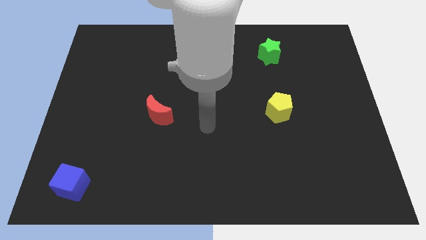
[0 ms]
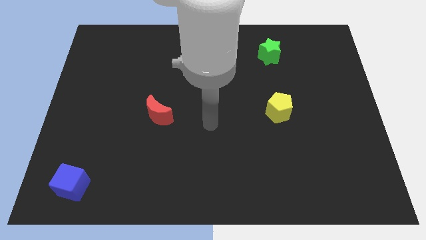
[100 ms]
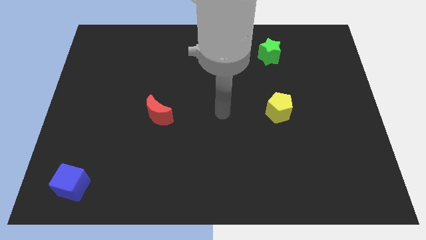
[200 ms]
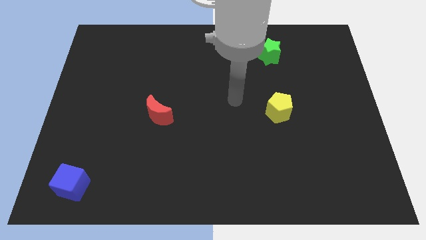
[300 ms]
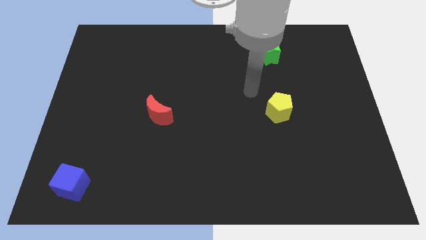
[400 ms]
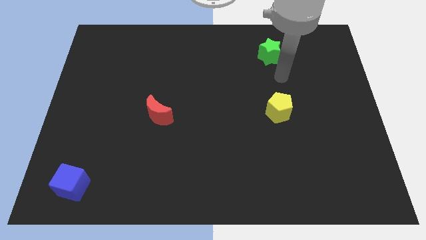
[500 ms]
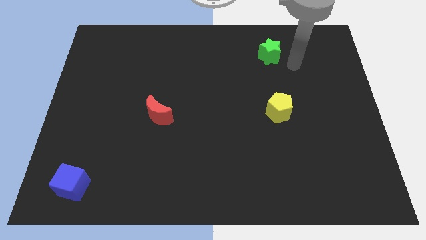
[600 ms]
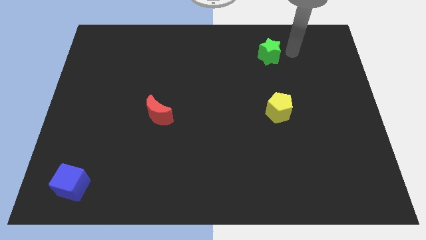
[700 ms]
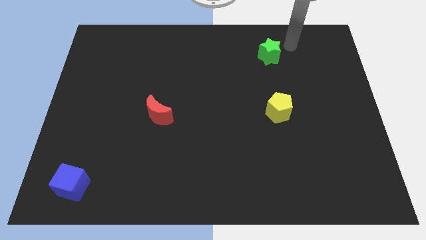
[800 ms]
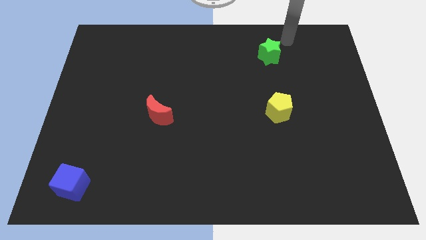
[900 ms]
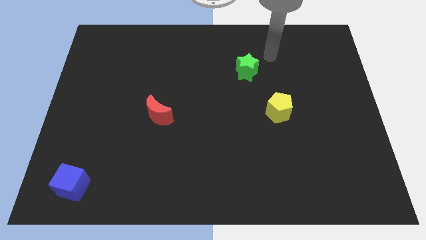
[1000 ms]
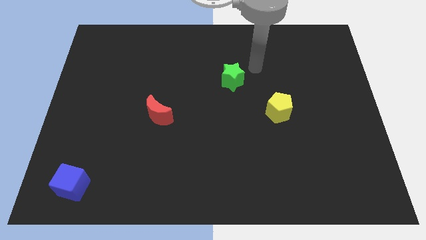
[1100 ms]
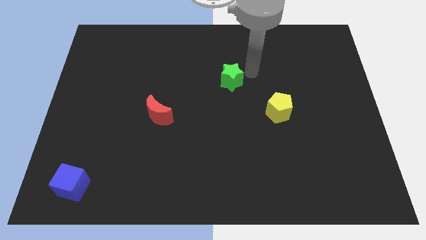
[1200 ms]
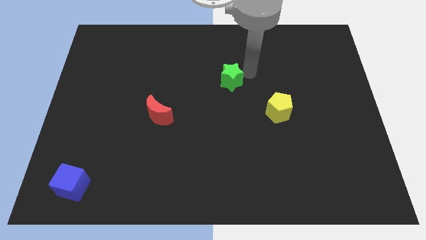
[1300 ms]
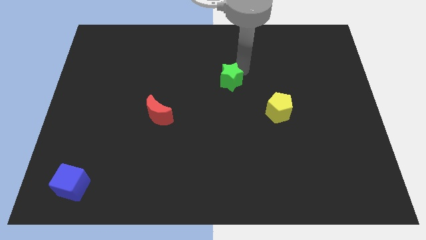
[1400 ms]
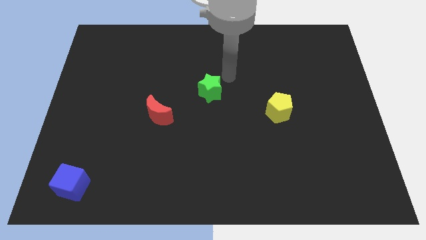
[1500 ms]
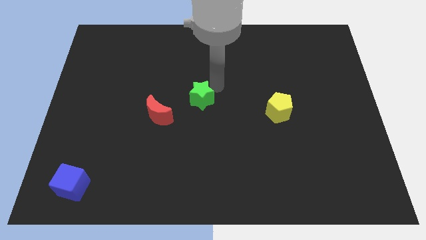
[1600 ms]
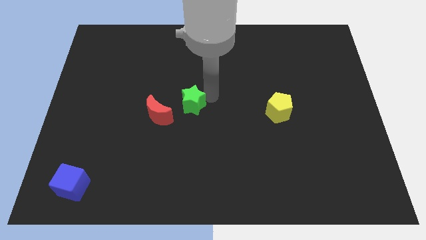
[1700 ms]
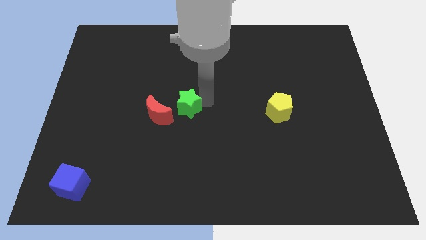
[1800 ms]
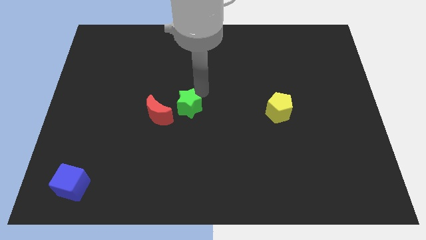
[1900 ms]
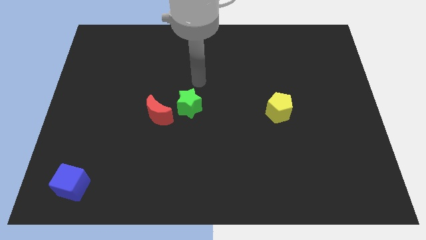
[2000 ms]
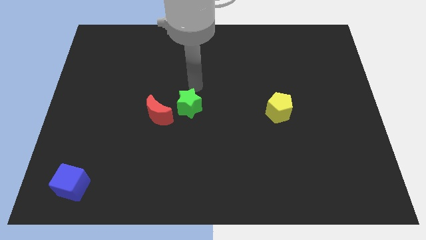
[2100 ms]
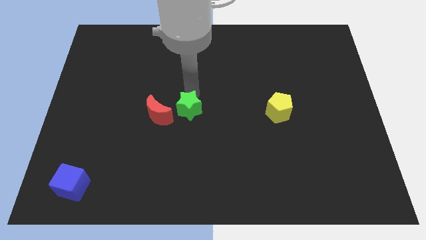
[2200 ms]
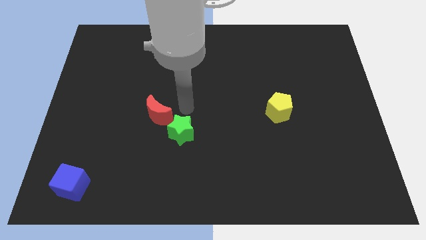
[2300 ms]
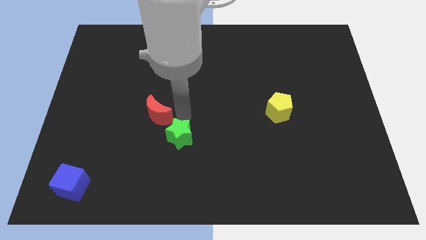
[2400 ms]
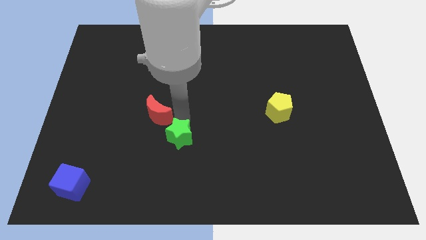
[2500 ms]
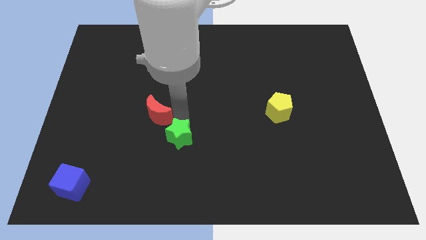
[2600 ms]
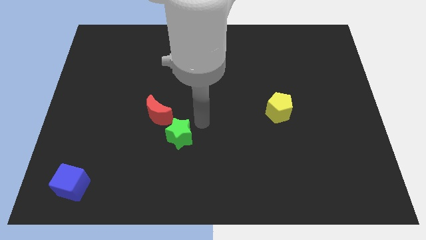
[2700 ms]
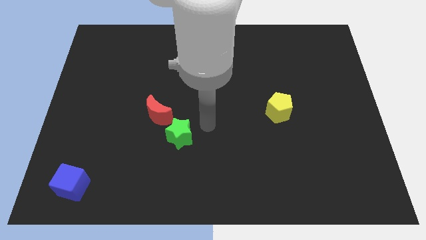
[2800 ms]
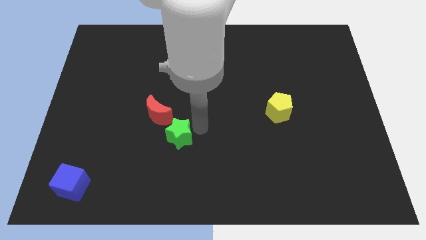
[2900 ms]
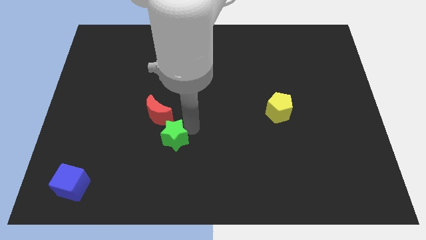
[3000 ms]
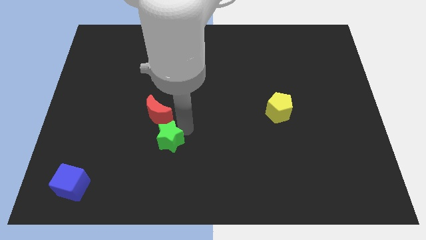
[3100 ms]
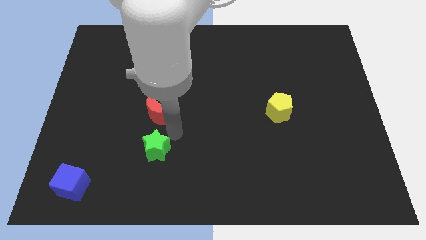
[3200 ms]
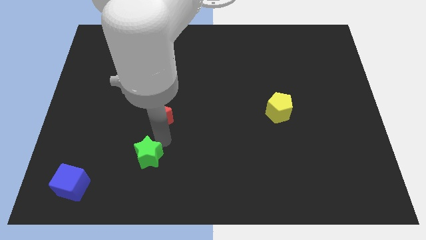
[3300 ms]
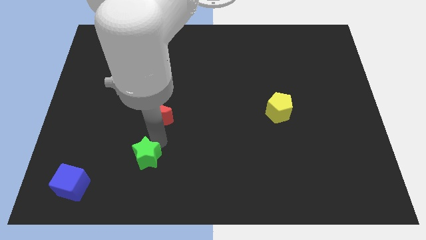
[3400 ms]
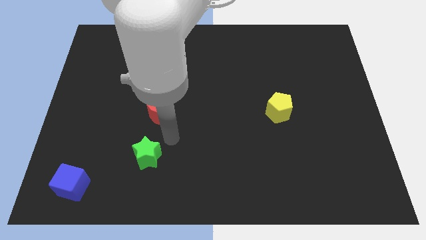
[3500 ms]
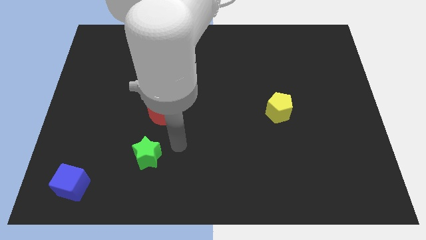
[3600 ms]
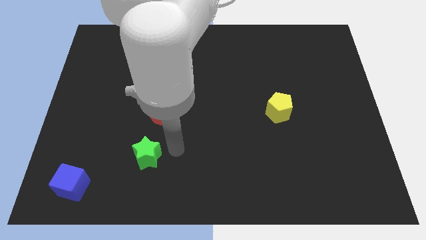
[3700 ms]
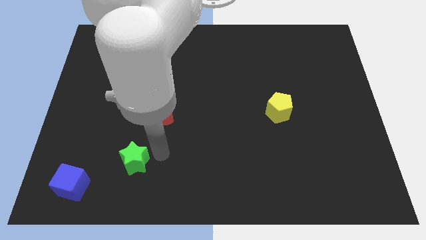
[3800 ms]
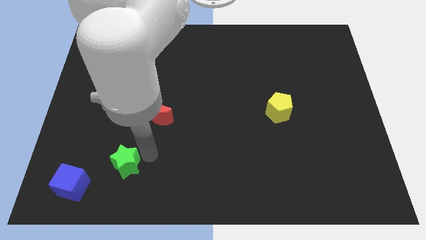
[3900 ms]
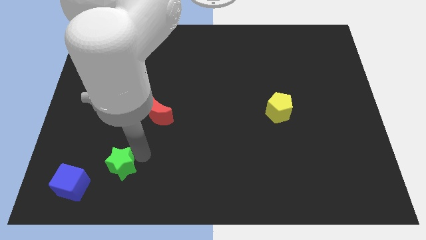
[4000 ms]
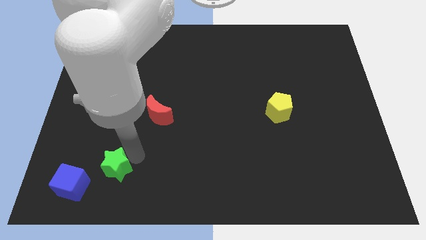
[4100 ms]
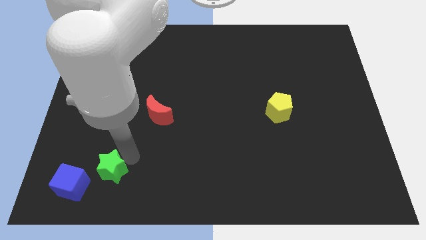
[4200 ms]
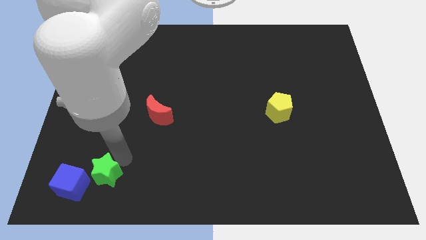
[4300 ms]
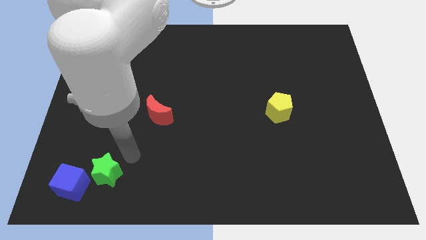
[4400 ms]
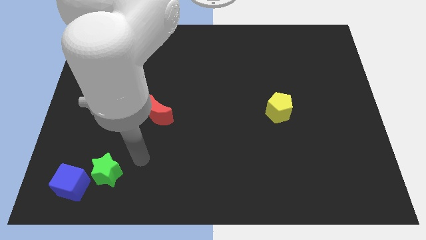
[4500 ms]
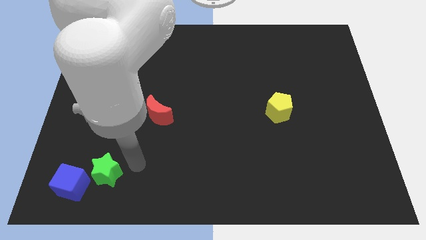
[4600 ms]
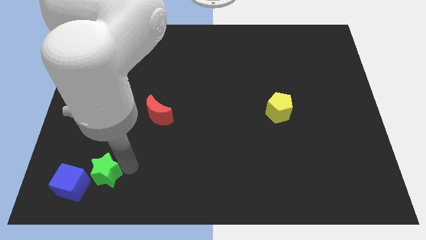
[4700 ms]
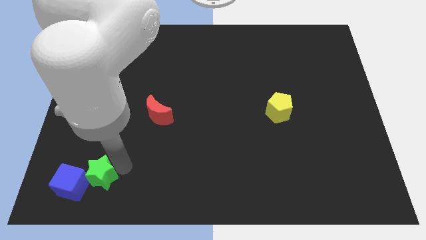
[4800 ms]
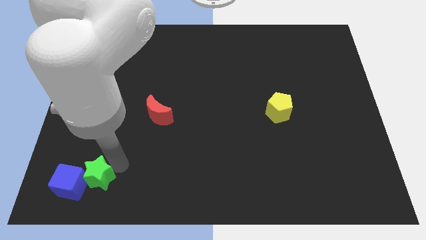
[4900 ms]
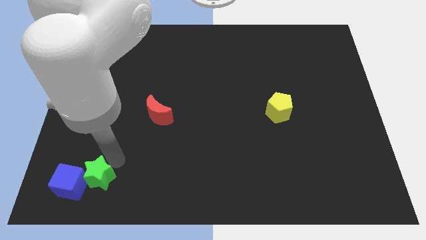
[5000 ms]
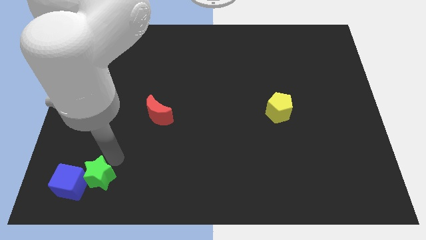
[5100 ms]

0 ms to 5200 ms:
slide the green star next to the blue cube

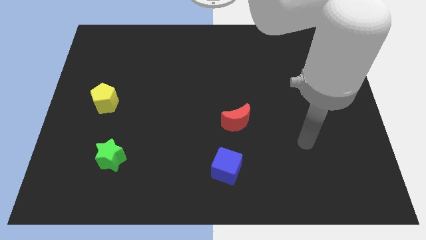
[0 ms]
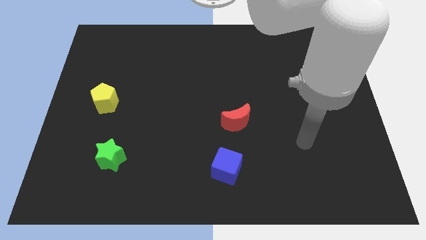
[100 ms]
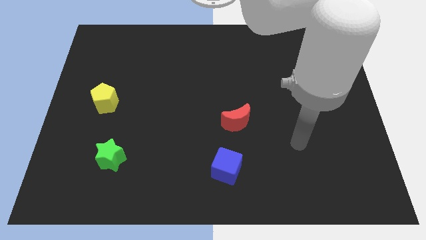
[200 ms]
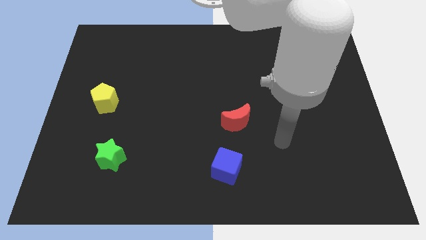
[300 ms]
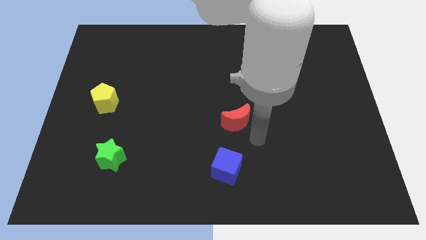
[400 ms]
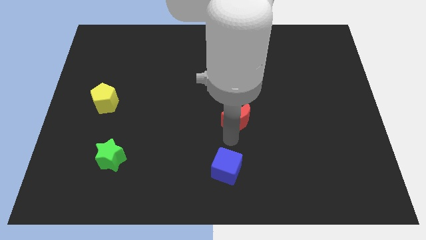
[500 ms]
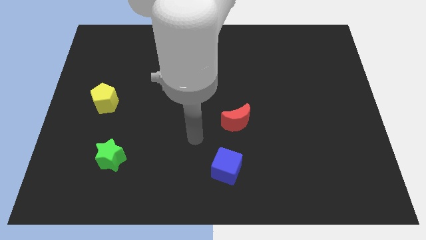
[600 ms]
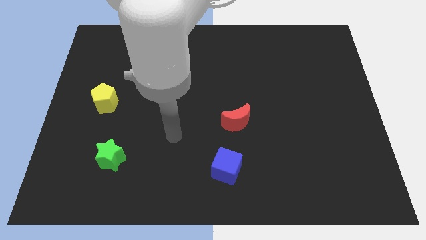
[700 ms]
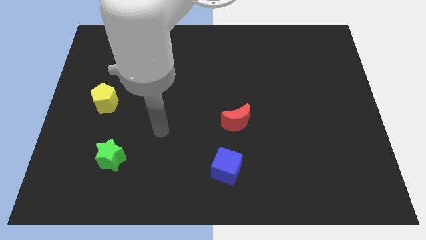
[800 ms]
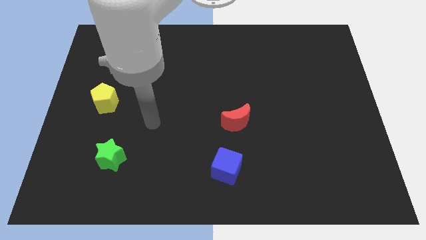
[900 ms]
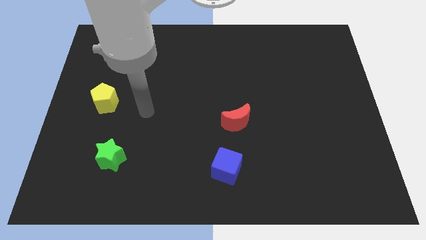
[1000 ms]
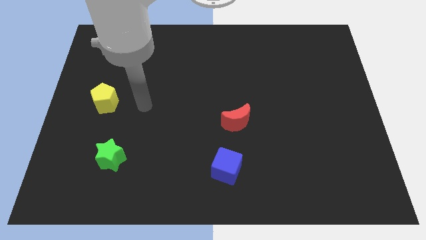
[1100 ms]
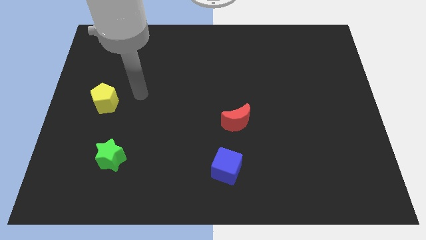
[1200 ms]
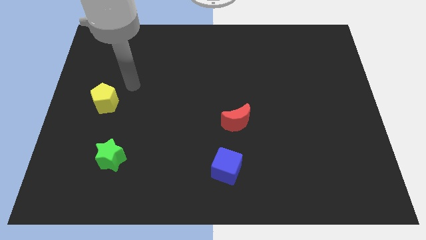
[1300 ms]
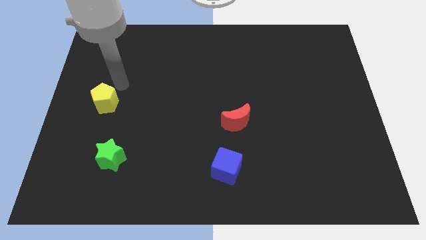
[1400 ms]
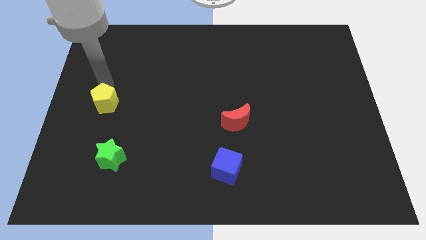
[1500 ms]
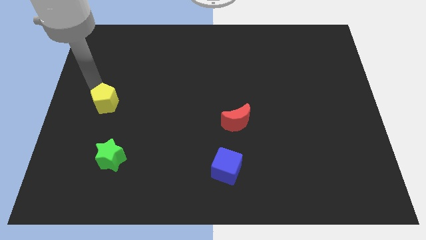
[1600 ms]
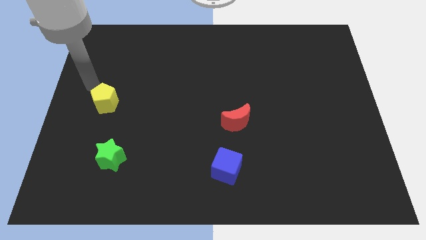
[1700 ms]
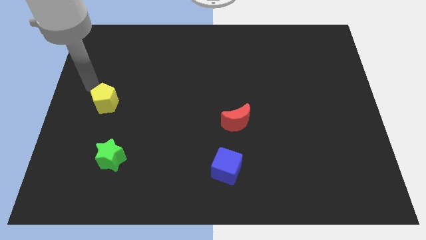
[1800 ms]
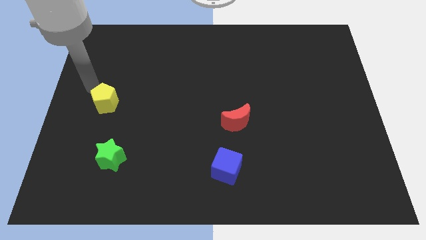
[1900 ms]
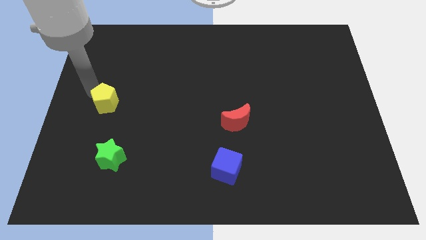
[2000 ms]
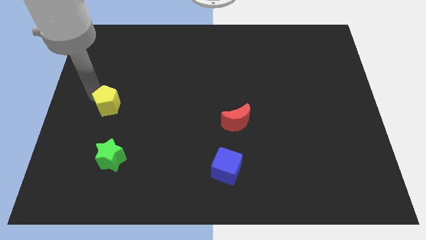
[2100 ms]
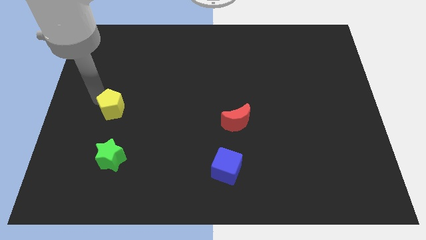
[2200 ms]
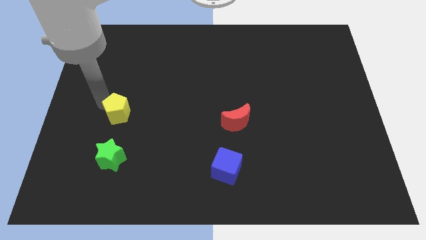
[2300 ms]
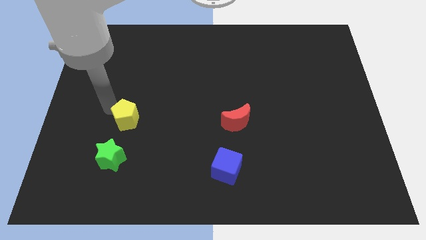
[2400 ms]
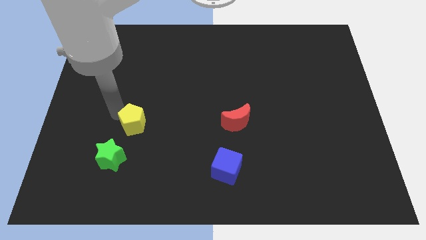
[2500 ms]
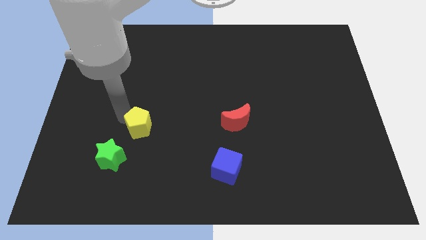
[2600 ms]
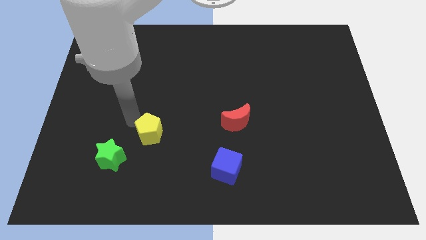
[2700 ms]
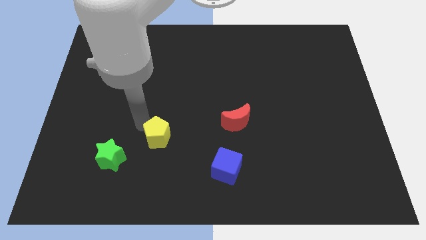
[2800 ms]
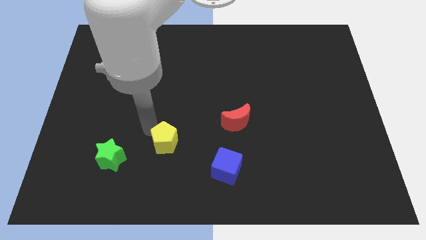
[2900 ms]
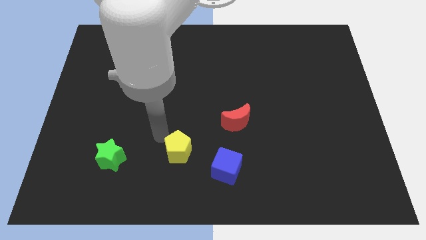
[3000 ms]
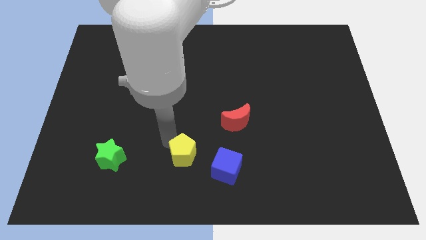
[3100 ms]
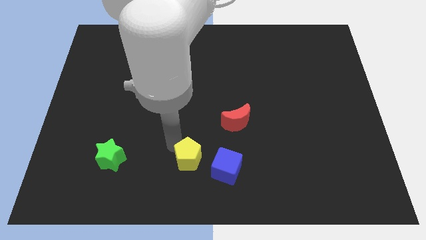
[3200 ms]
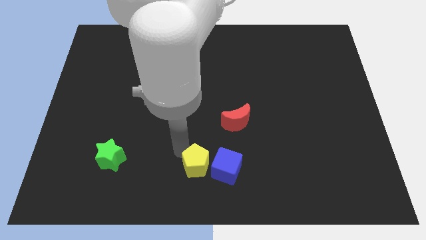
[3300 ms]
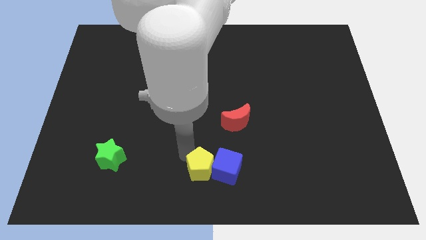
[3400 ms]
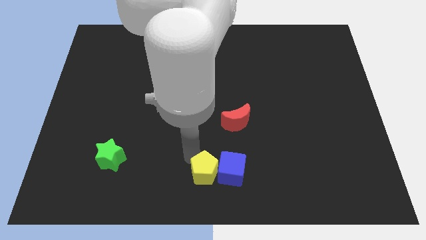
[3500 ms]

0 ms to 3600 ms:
put the pentagon close to the blue cube
